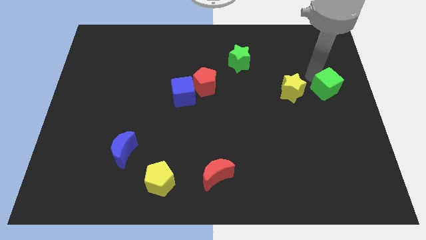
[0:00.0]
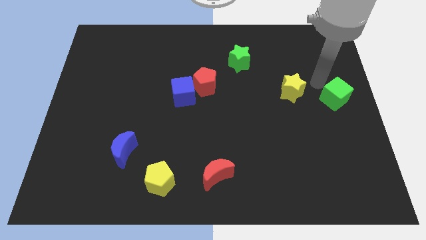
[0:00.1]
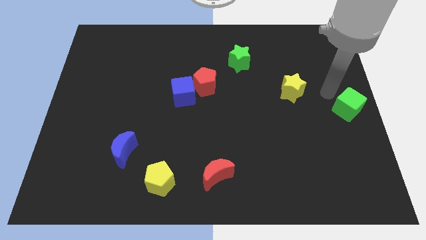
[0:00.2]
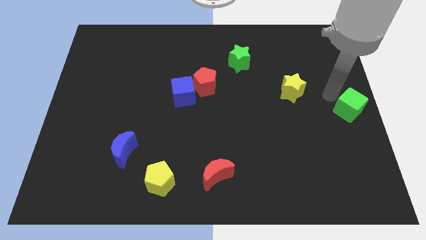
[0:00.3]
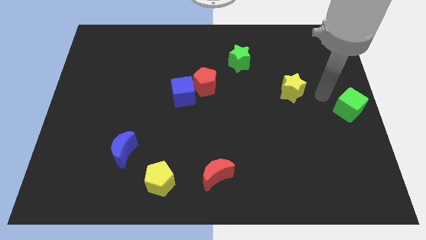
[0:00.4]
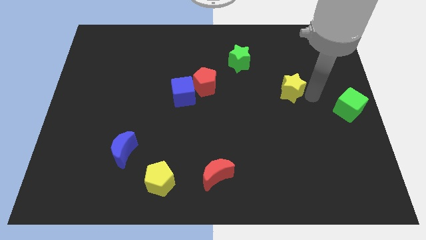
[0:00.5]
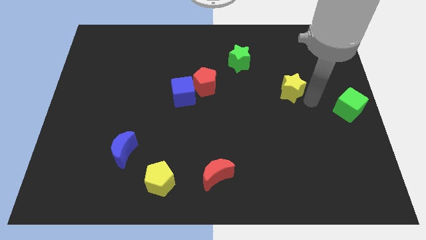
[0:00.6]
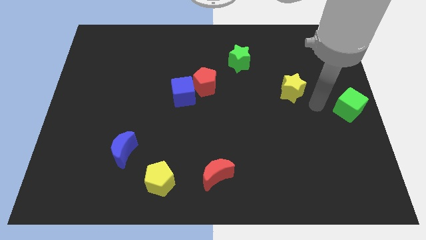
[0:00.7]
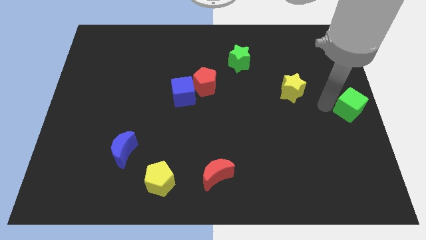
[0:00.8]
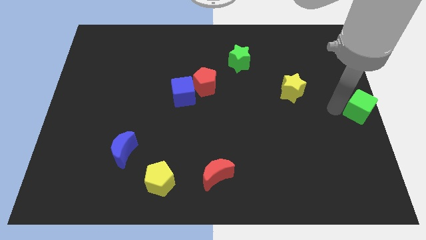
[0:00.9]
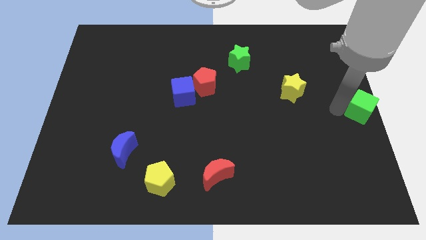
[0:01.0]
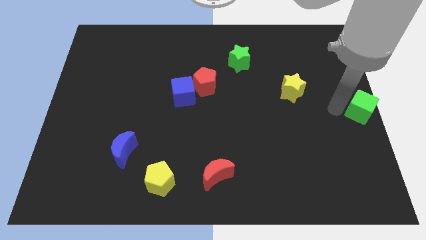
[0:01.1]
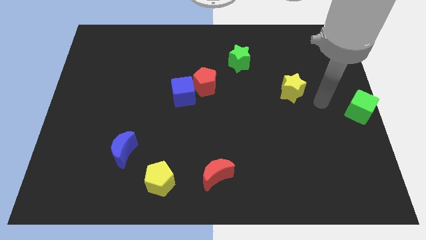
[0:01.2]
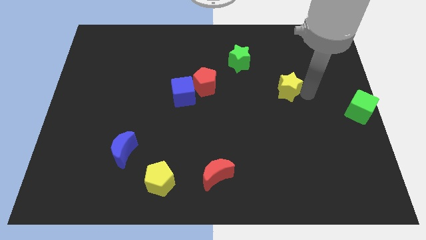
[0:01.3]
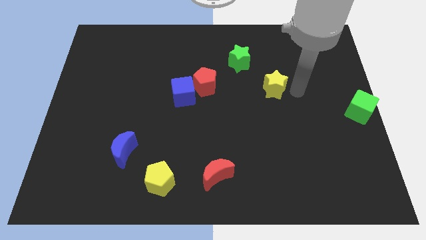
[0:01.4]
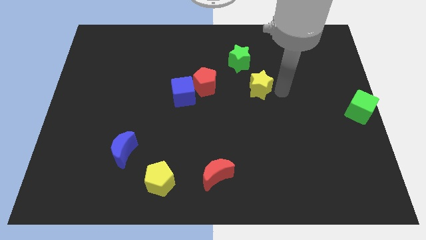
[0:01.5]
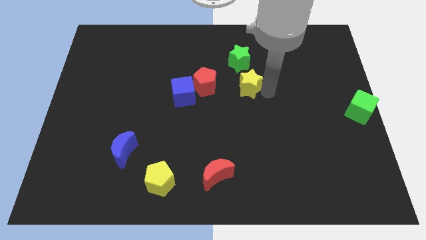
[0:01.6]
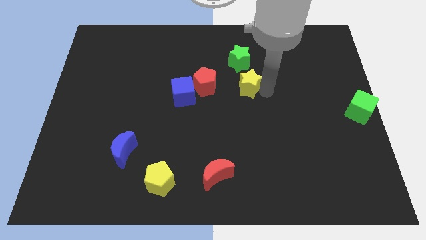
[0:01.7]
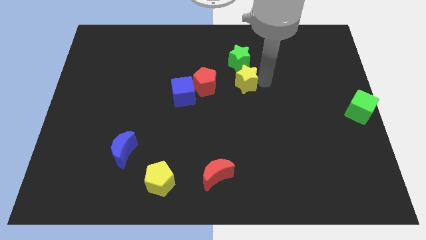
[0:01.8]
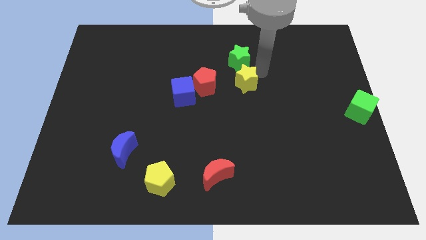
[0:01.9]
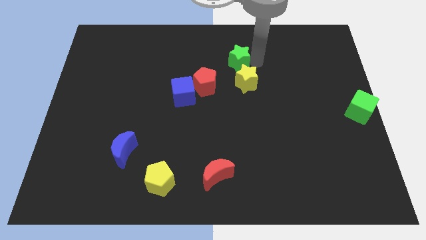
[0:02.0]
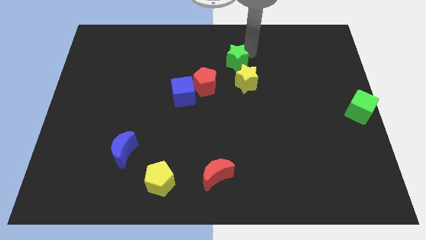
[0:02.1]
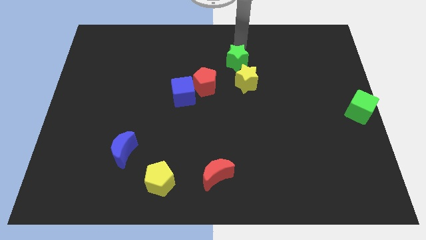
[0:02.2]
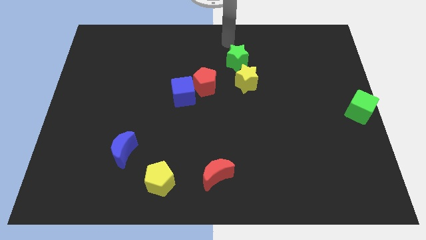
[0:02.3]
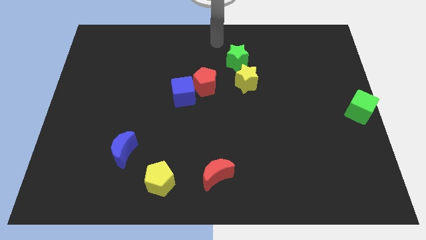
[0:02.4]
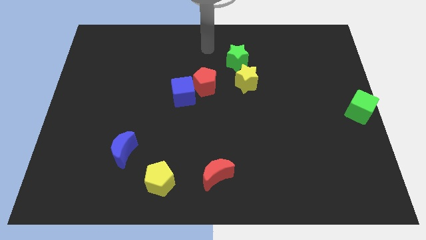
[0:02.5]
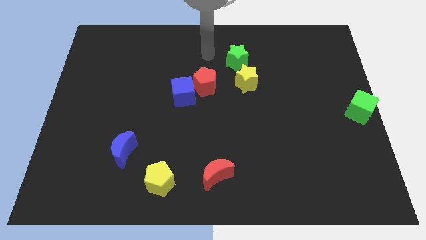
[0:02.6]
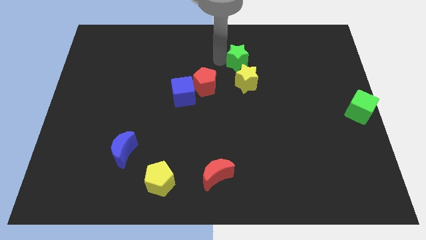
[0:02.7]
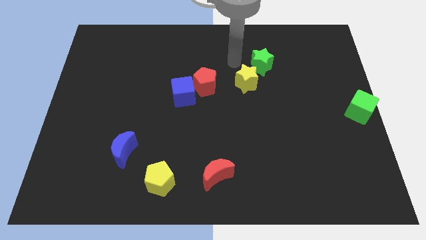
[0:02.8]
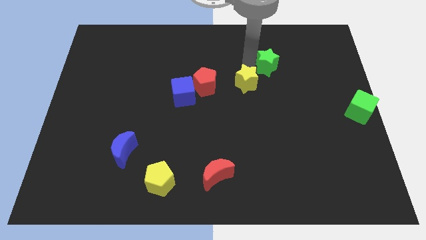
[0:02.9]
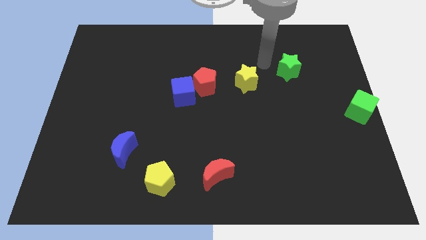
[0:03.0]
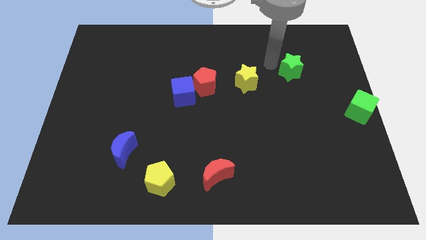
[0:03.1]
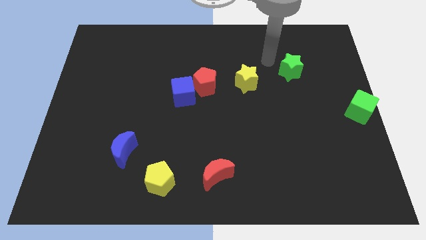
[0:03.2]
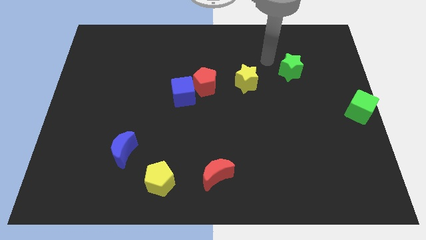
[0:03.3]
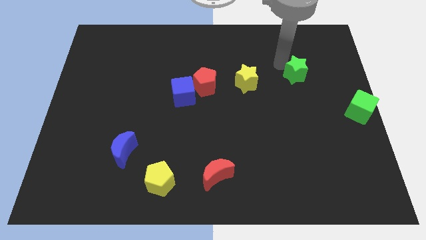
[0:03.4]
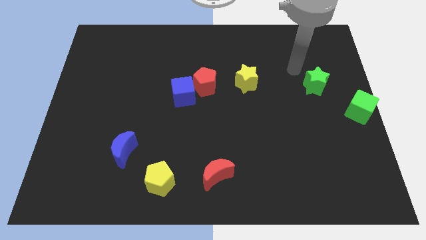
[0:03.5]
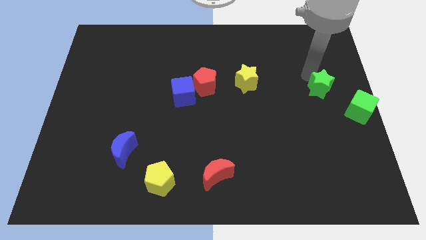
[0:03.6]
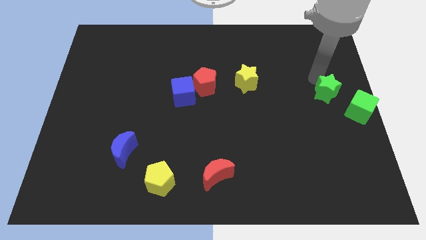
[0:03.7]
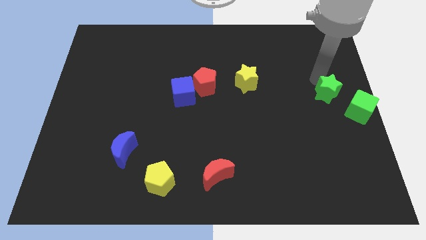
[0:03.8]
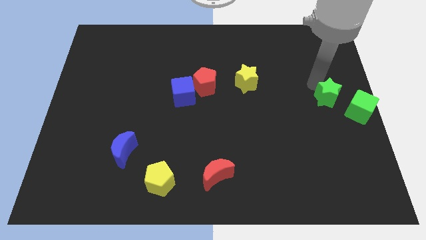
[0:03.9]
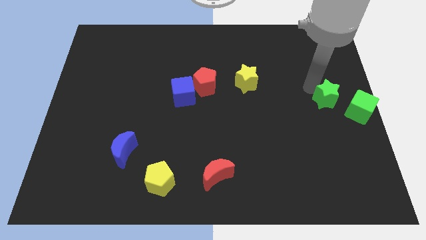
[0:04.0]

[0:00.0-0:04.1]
slightly move the green star closet to the green cube

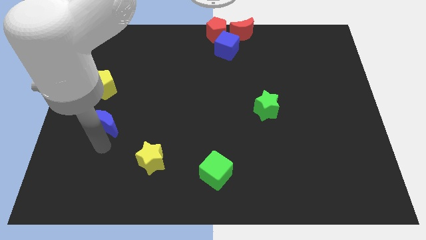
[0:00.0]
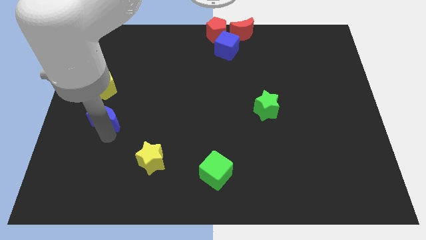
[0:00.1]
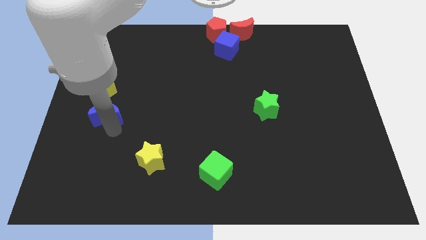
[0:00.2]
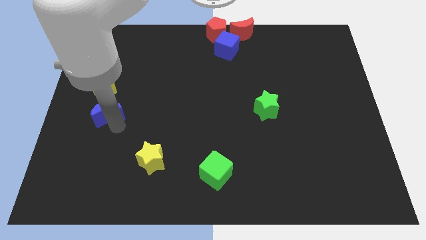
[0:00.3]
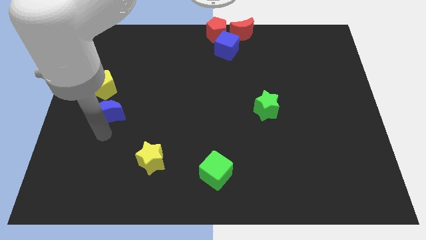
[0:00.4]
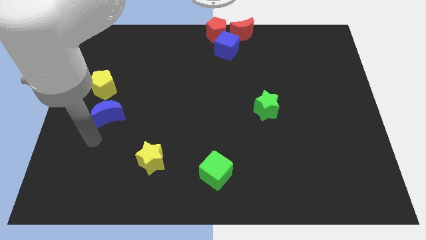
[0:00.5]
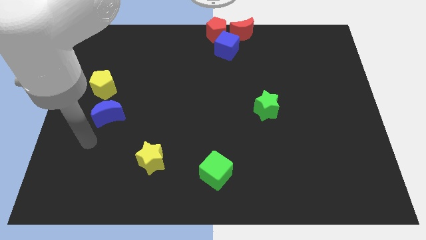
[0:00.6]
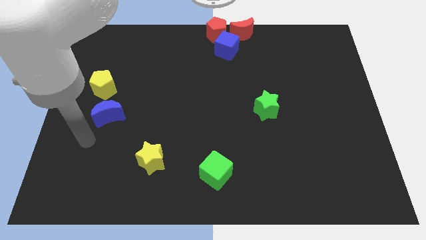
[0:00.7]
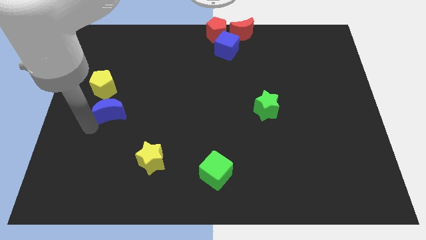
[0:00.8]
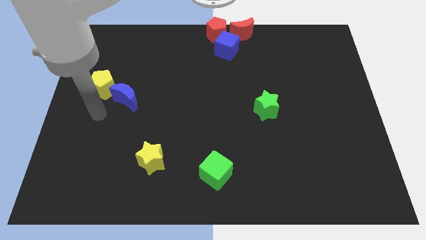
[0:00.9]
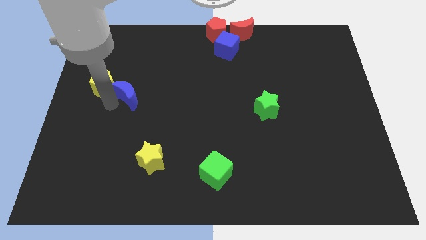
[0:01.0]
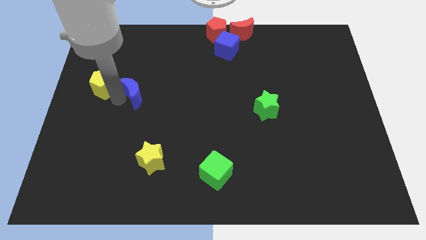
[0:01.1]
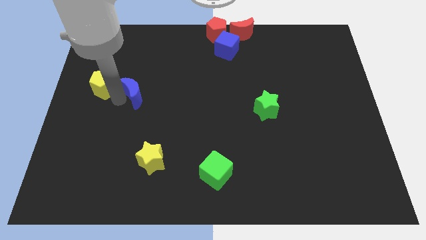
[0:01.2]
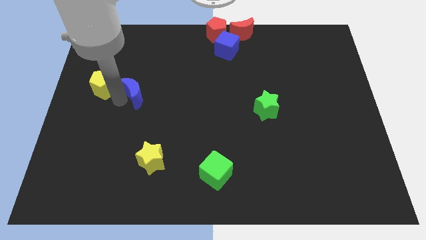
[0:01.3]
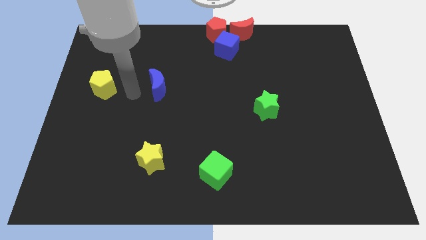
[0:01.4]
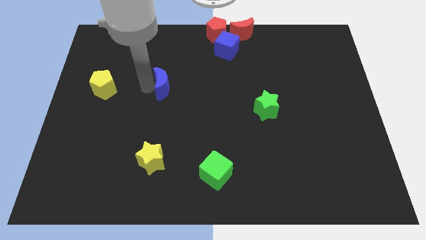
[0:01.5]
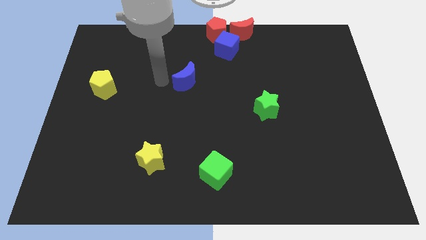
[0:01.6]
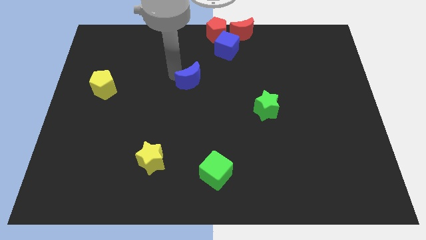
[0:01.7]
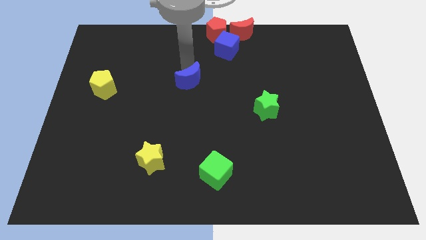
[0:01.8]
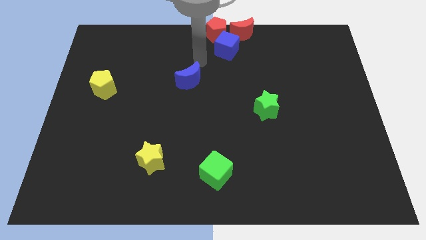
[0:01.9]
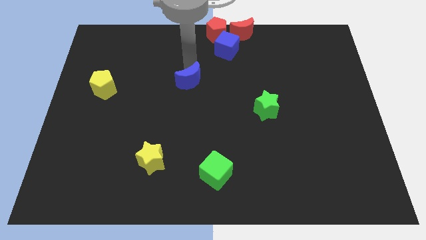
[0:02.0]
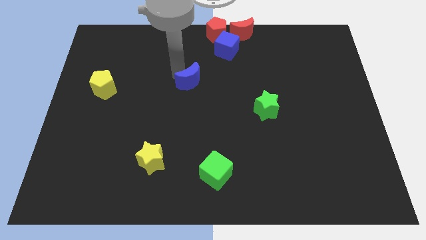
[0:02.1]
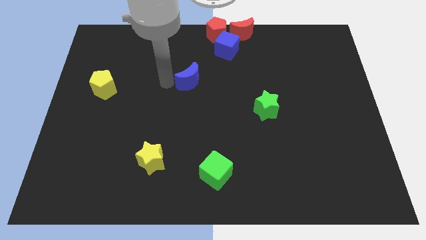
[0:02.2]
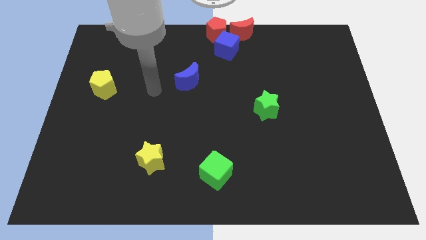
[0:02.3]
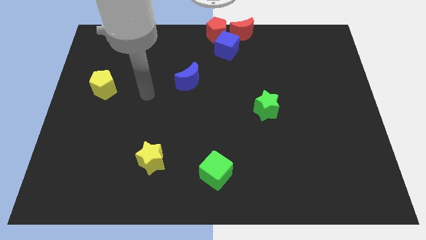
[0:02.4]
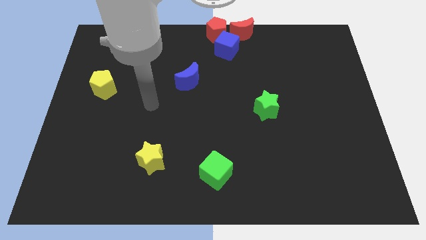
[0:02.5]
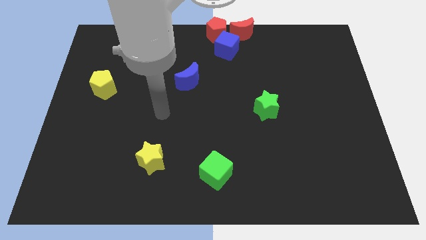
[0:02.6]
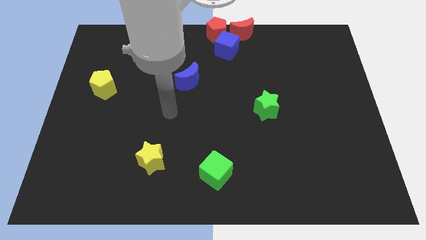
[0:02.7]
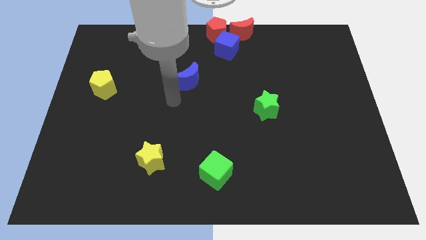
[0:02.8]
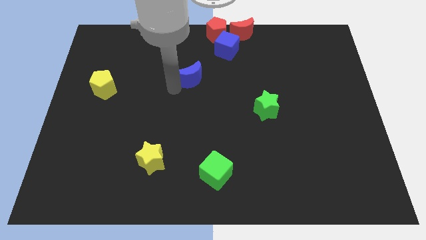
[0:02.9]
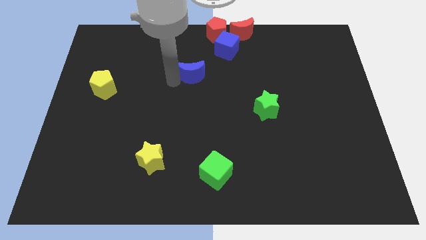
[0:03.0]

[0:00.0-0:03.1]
place the blue moon diagonally to the blue cube

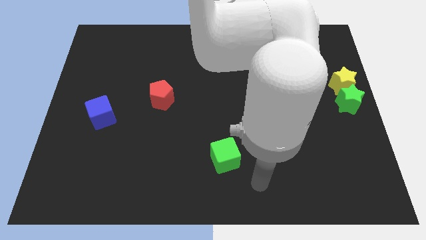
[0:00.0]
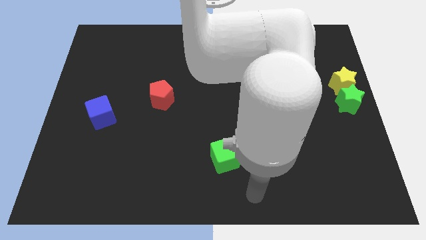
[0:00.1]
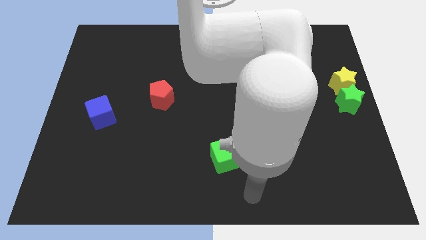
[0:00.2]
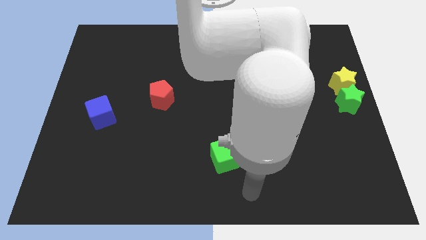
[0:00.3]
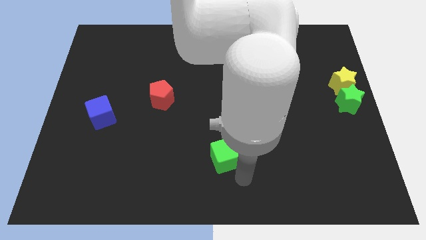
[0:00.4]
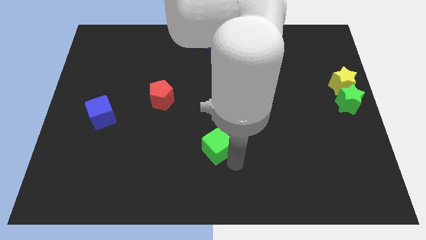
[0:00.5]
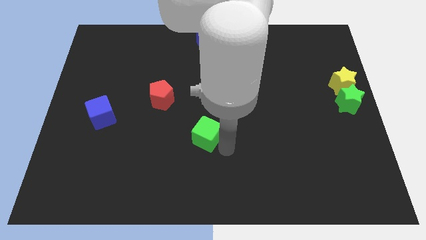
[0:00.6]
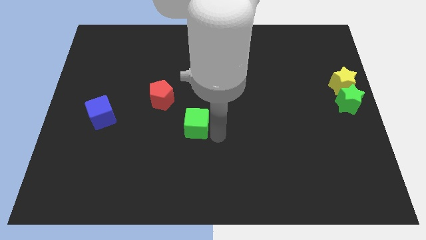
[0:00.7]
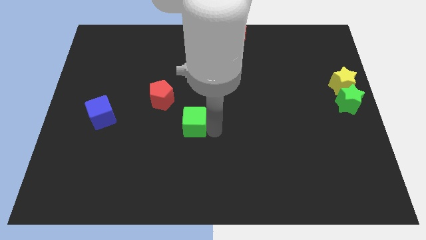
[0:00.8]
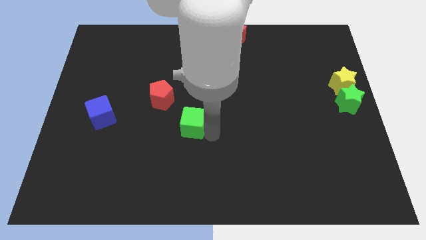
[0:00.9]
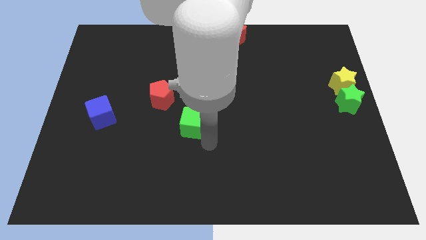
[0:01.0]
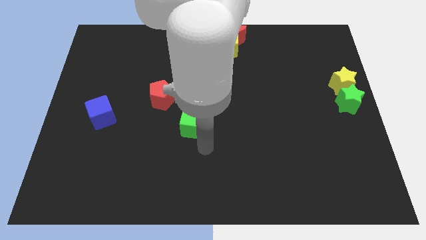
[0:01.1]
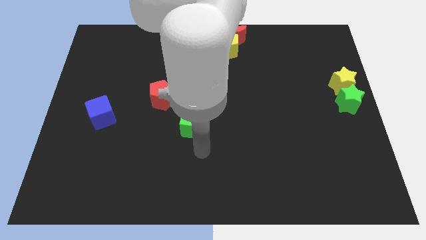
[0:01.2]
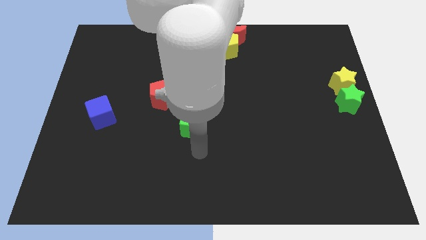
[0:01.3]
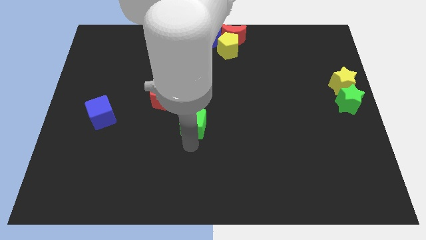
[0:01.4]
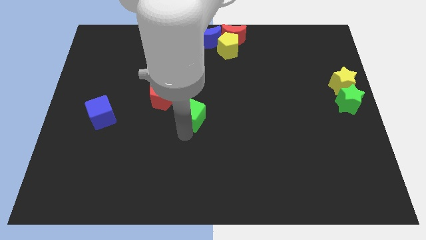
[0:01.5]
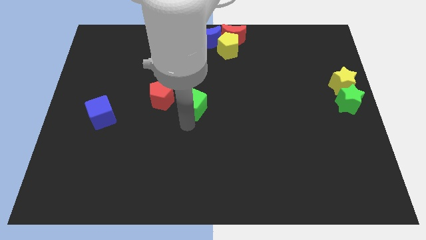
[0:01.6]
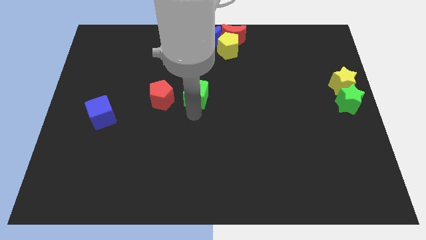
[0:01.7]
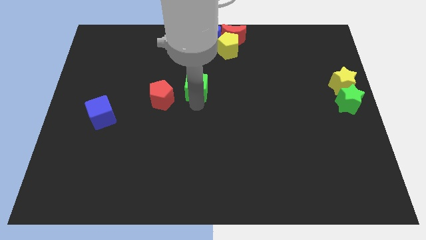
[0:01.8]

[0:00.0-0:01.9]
push the green cube to the right side of the red pentagon
